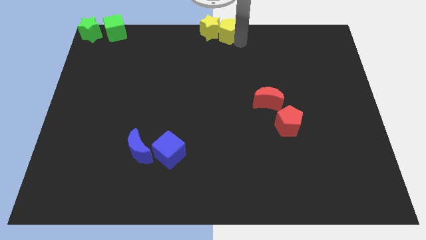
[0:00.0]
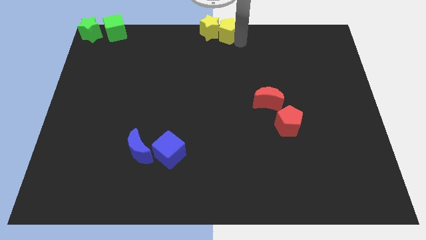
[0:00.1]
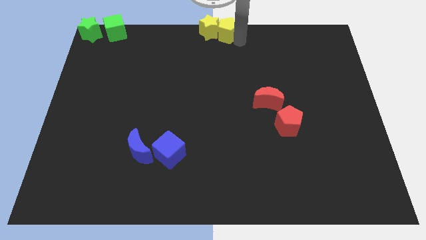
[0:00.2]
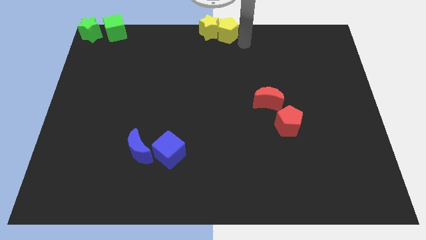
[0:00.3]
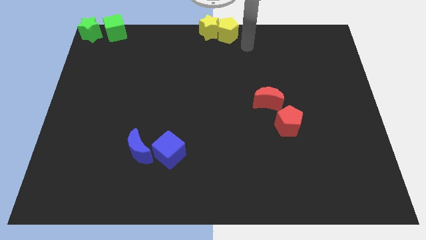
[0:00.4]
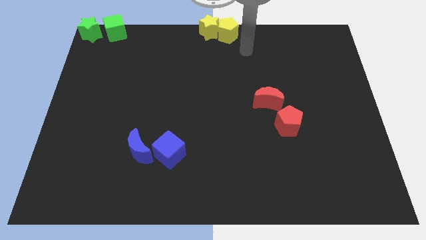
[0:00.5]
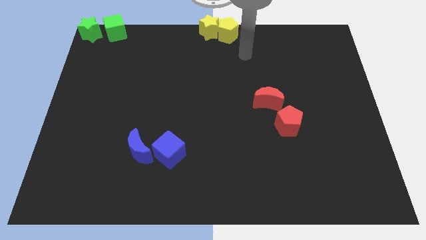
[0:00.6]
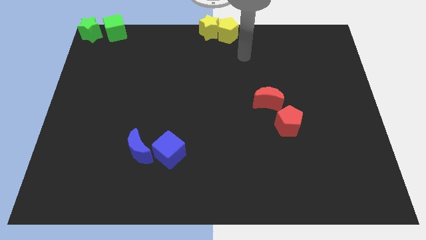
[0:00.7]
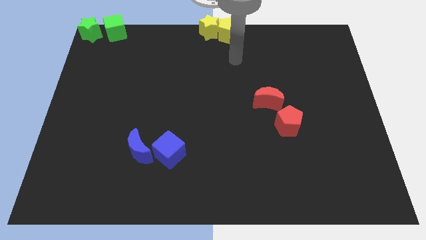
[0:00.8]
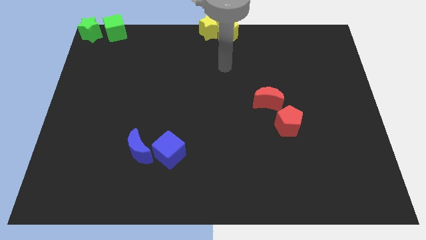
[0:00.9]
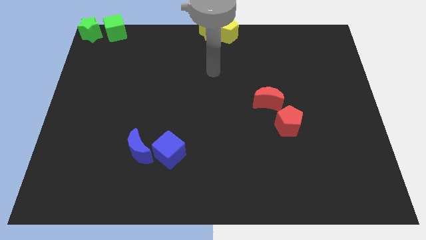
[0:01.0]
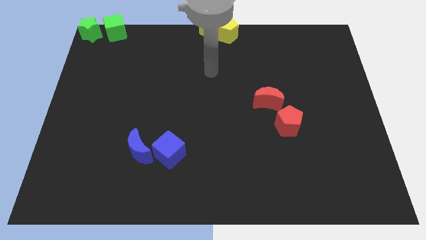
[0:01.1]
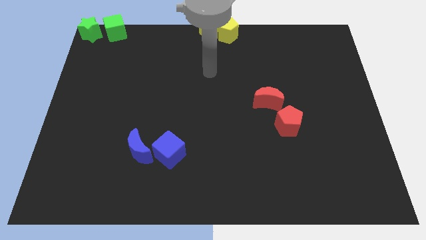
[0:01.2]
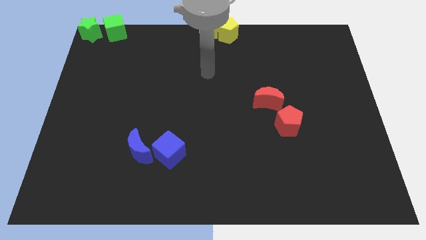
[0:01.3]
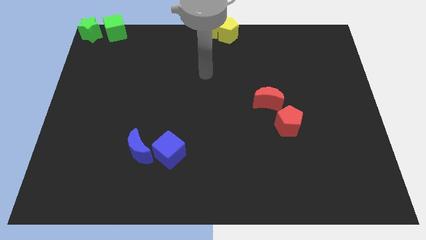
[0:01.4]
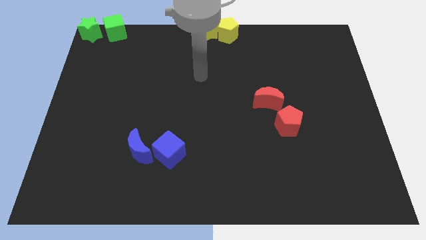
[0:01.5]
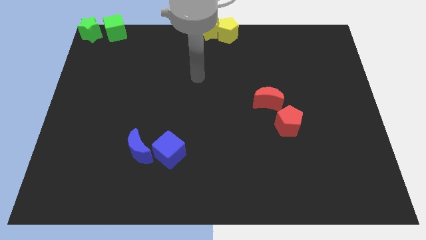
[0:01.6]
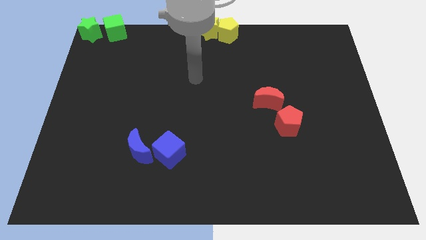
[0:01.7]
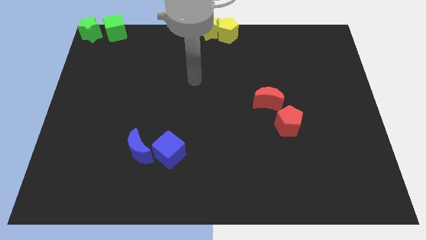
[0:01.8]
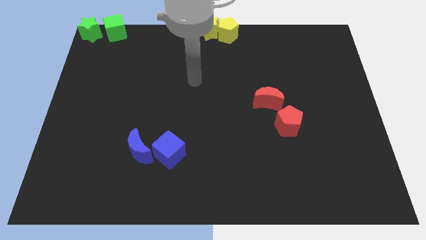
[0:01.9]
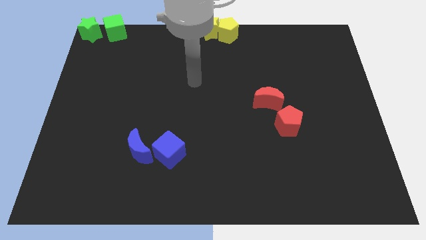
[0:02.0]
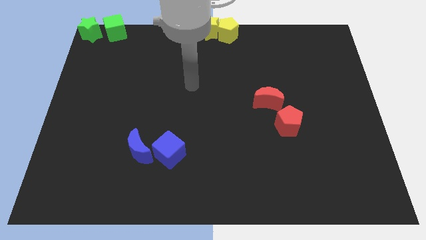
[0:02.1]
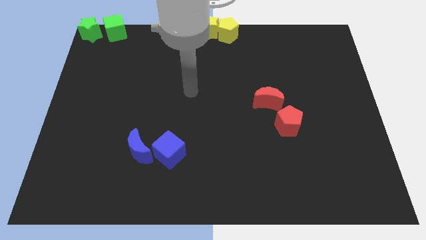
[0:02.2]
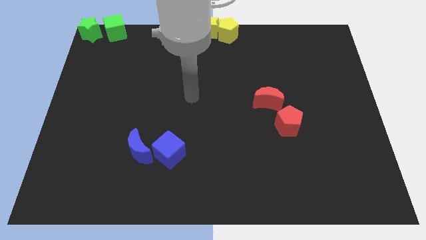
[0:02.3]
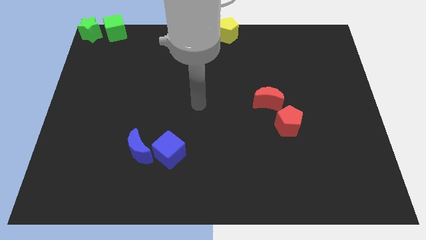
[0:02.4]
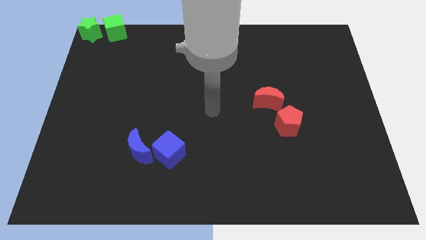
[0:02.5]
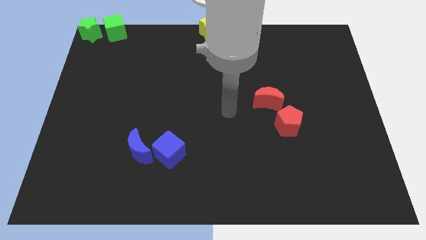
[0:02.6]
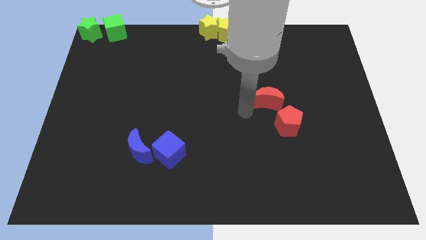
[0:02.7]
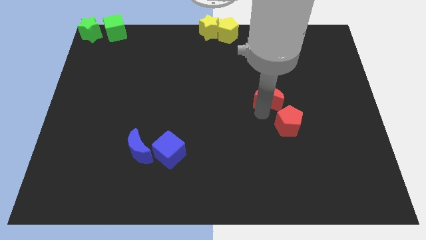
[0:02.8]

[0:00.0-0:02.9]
move arm away from yellow pentagon

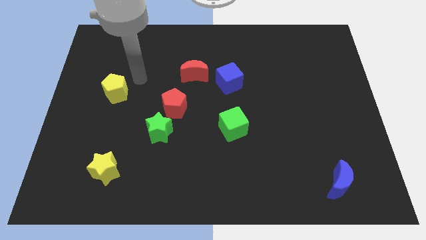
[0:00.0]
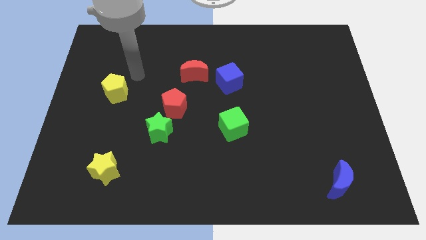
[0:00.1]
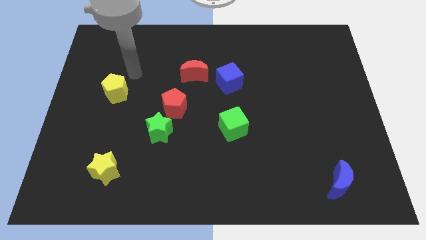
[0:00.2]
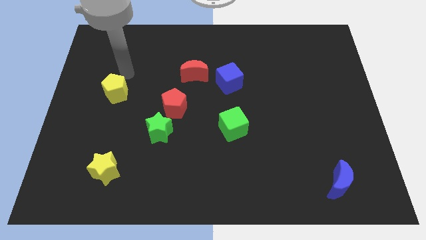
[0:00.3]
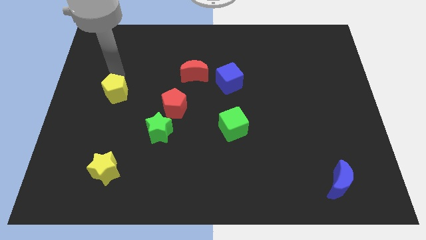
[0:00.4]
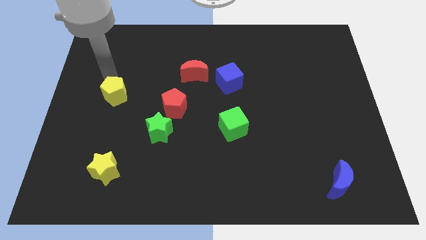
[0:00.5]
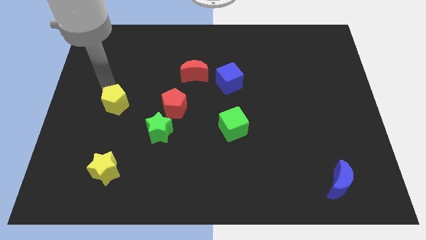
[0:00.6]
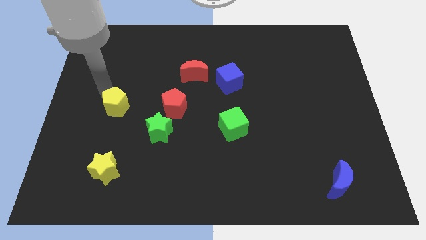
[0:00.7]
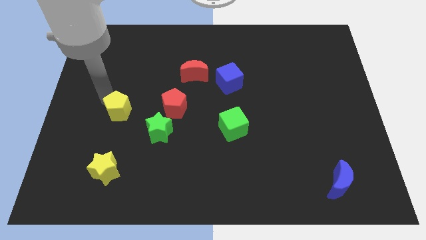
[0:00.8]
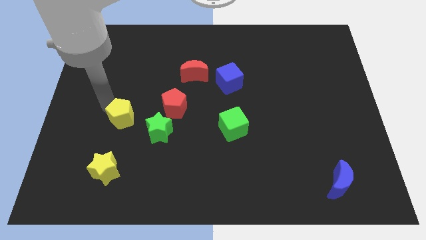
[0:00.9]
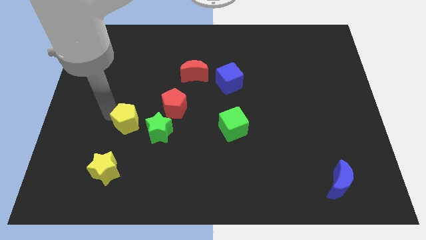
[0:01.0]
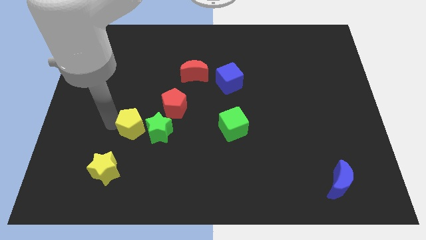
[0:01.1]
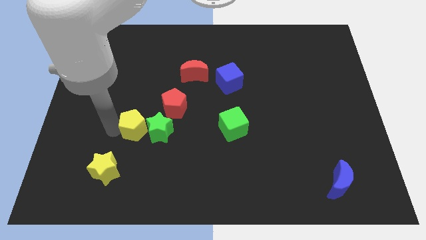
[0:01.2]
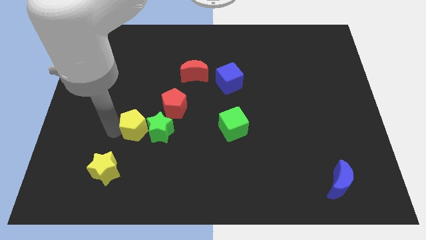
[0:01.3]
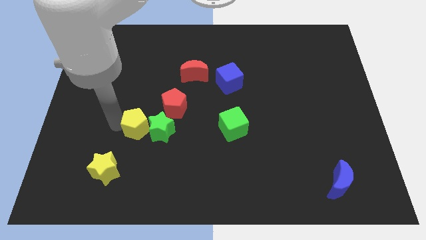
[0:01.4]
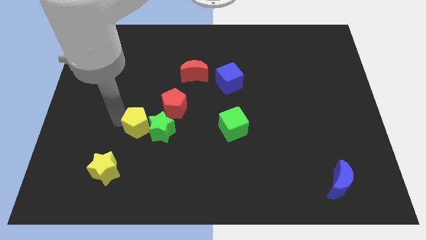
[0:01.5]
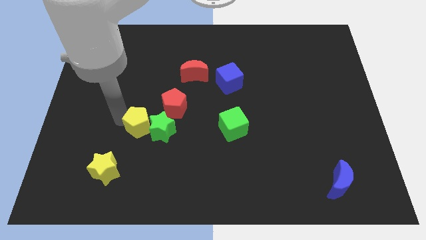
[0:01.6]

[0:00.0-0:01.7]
move the yellow pentagon to the left of the green star

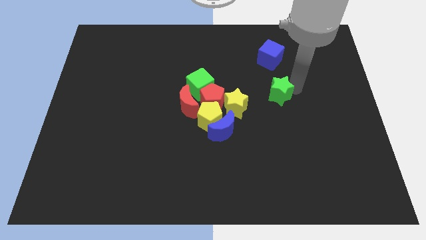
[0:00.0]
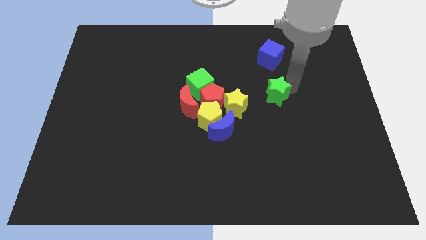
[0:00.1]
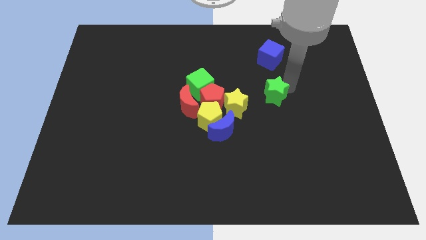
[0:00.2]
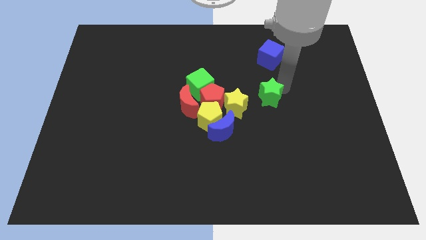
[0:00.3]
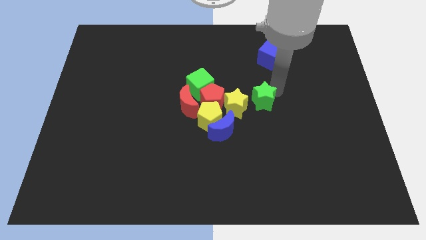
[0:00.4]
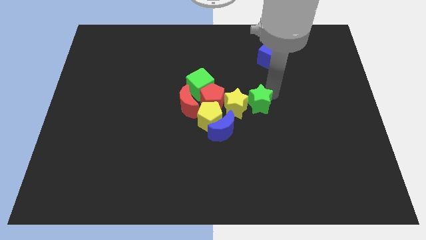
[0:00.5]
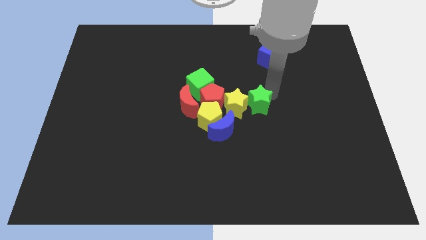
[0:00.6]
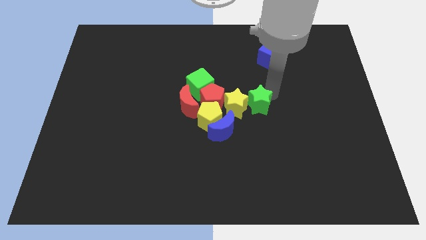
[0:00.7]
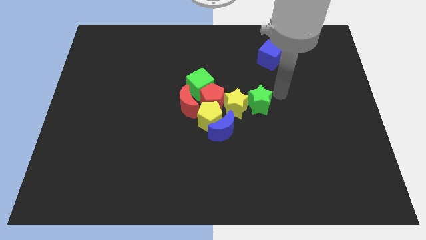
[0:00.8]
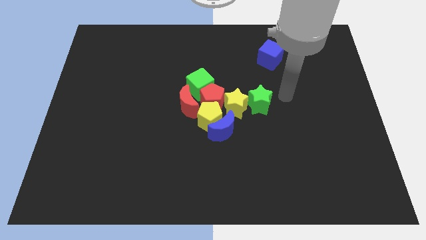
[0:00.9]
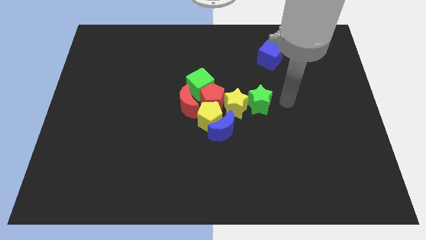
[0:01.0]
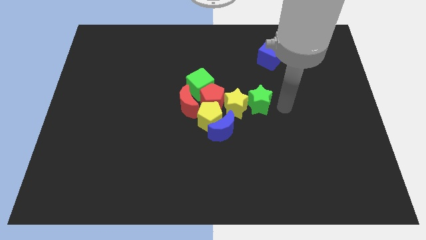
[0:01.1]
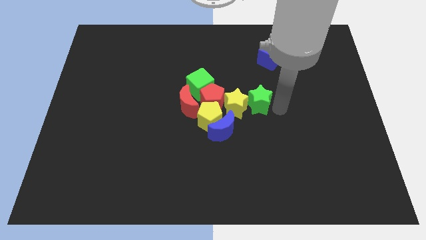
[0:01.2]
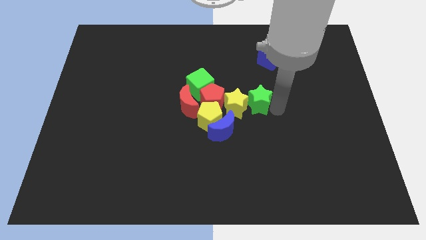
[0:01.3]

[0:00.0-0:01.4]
move green star right side to the yellow star

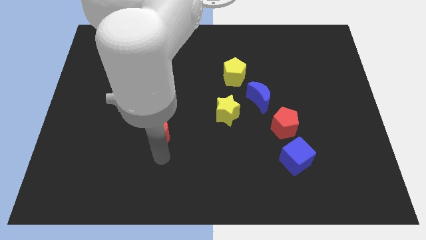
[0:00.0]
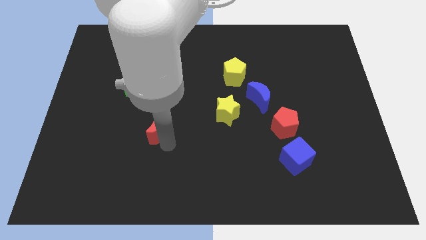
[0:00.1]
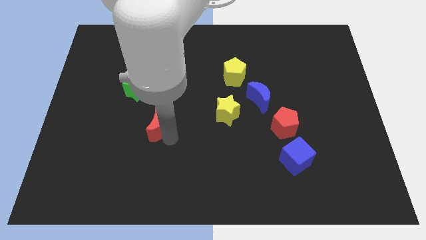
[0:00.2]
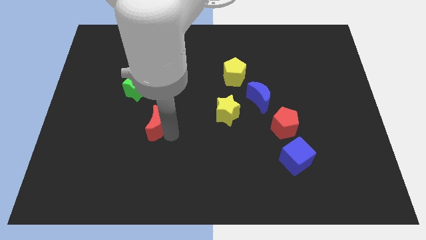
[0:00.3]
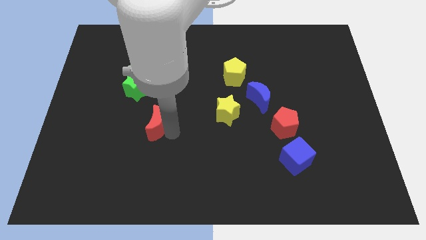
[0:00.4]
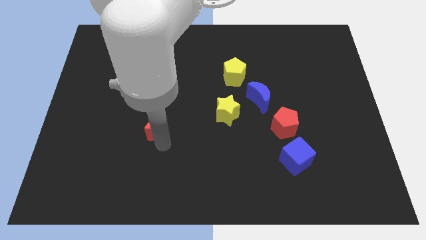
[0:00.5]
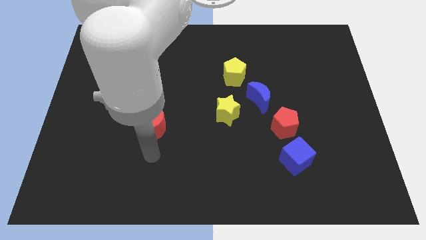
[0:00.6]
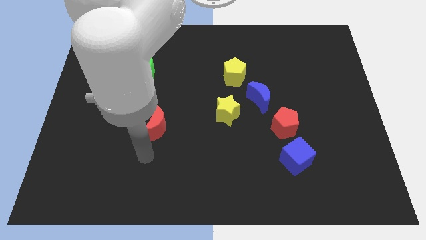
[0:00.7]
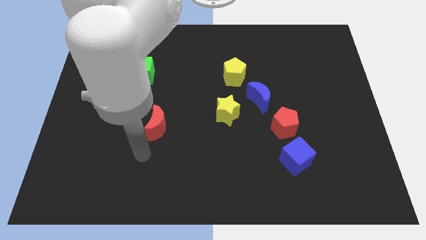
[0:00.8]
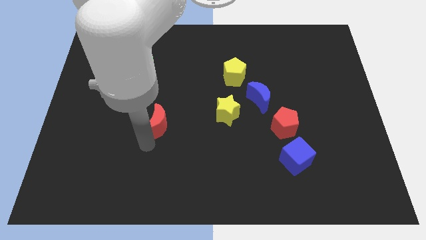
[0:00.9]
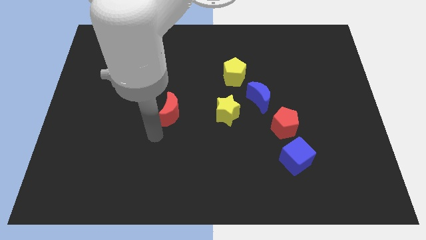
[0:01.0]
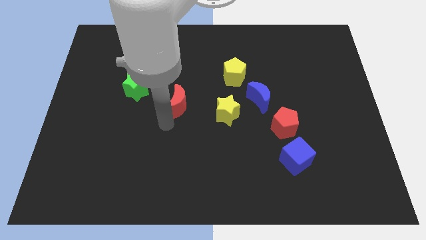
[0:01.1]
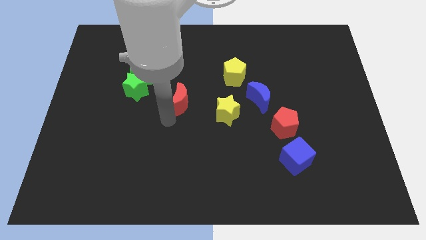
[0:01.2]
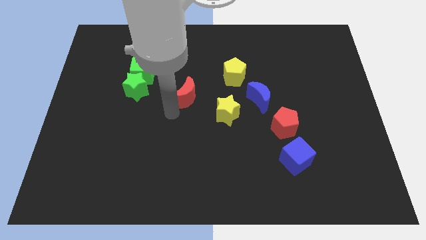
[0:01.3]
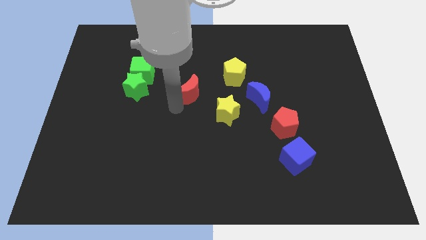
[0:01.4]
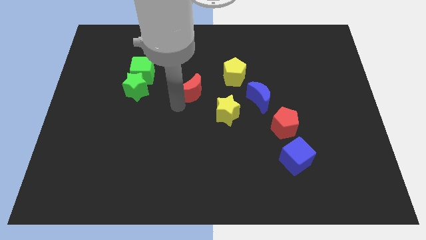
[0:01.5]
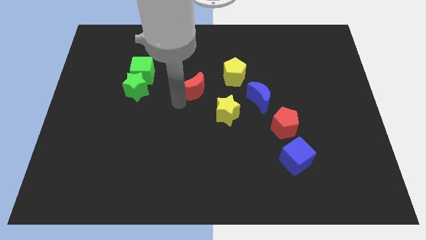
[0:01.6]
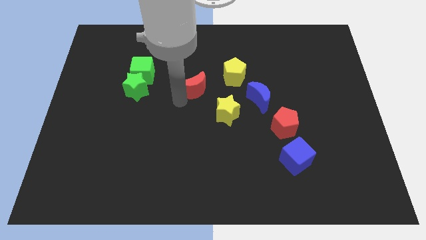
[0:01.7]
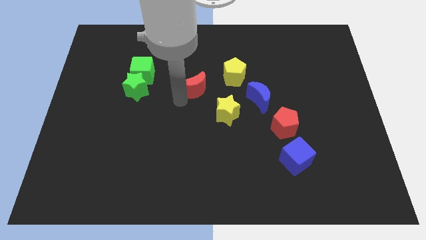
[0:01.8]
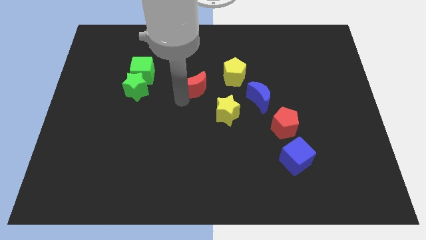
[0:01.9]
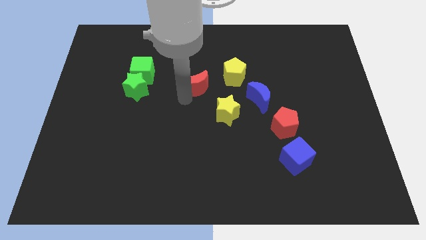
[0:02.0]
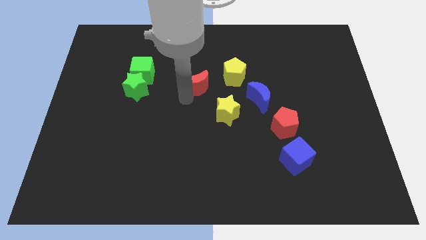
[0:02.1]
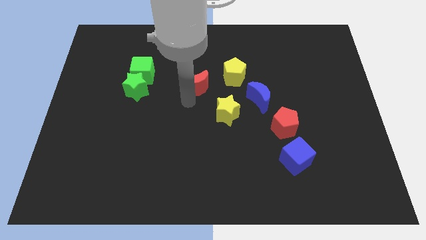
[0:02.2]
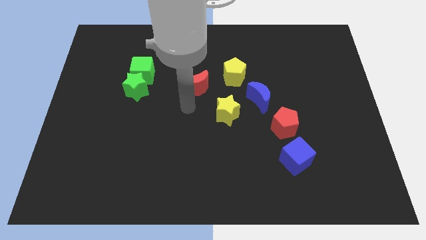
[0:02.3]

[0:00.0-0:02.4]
push the red crescent slightly left to the yellow pentagon

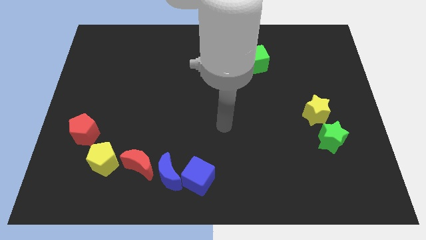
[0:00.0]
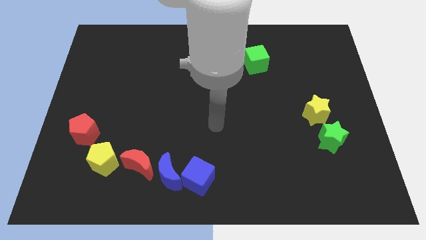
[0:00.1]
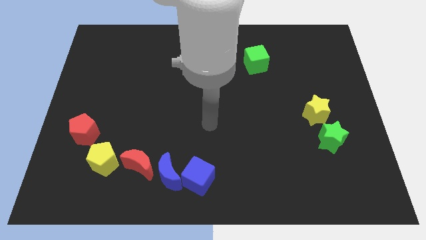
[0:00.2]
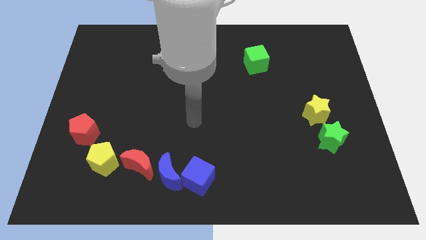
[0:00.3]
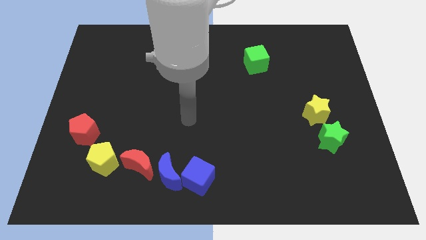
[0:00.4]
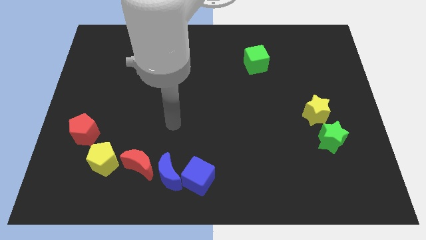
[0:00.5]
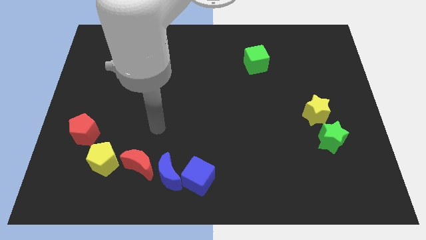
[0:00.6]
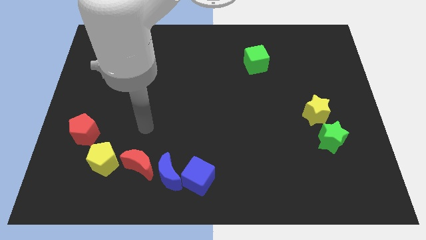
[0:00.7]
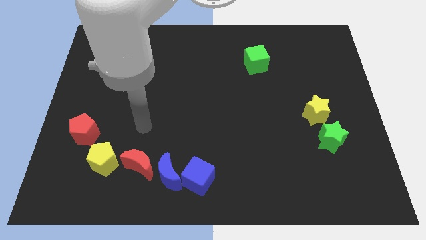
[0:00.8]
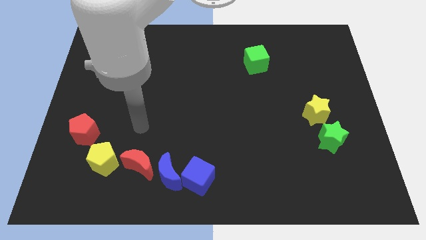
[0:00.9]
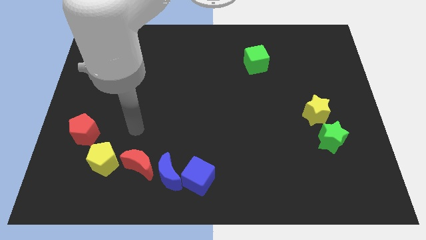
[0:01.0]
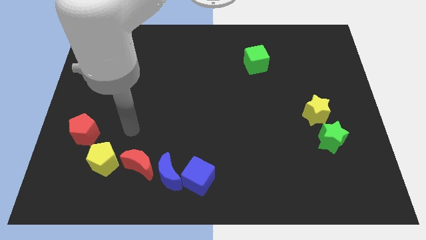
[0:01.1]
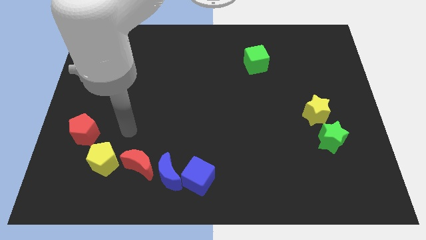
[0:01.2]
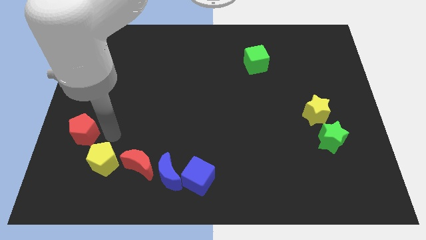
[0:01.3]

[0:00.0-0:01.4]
point your hand above the yellow pentagon
